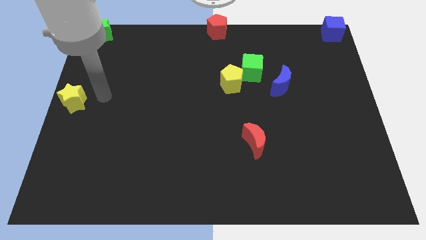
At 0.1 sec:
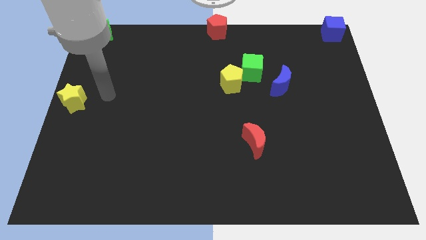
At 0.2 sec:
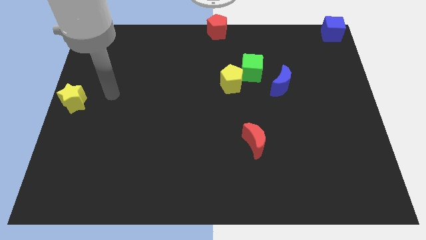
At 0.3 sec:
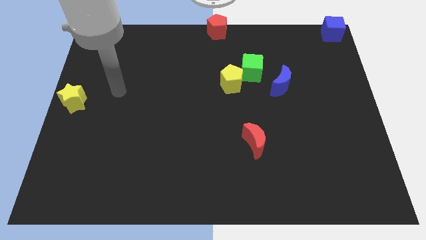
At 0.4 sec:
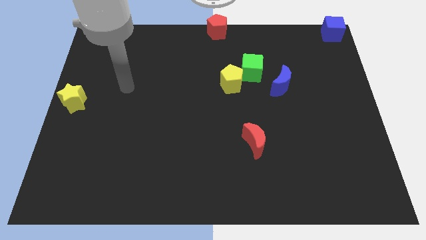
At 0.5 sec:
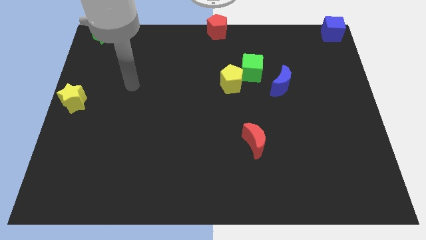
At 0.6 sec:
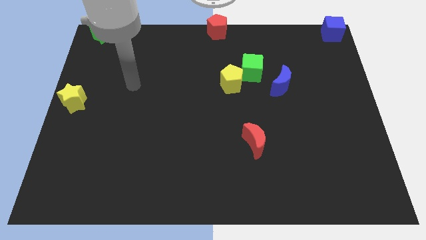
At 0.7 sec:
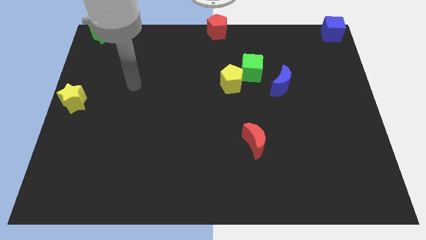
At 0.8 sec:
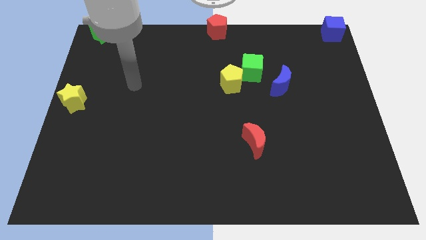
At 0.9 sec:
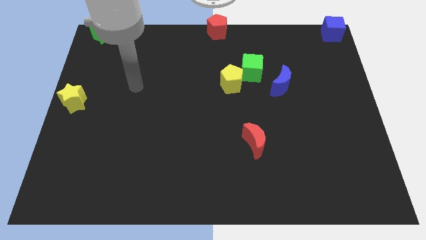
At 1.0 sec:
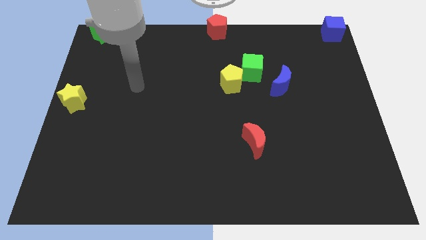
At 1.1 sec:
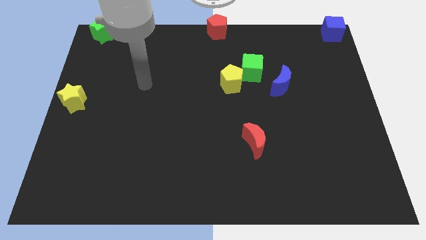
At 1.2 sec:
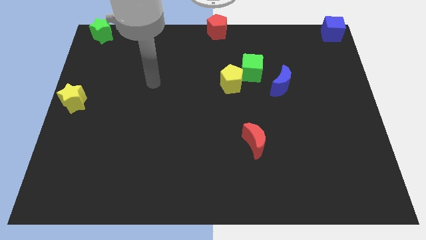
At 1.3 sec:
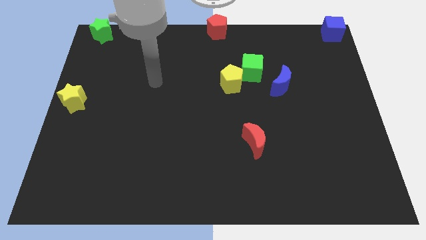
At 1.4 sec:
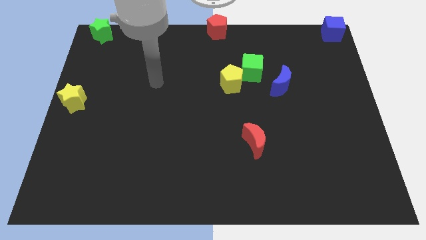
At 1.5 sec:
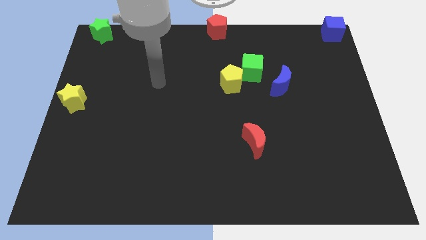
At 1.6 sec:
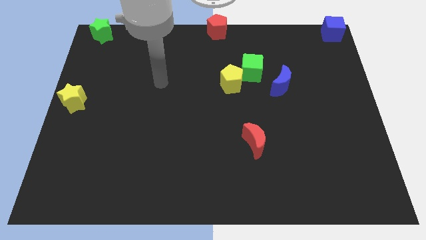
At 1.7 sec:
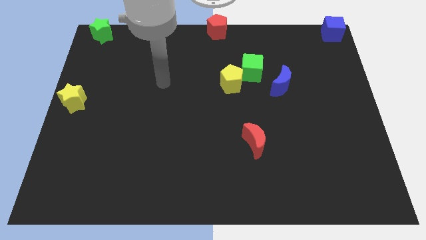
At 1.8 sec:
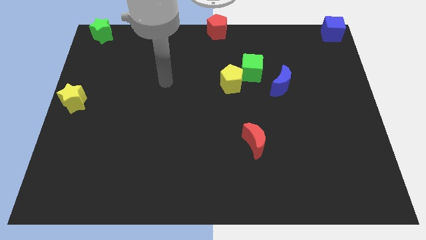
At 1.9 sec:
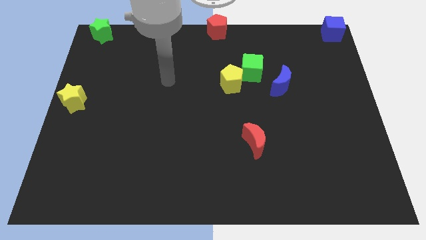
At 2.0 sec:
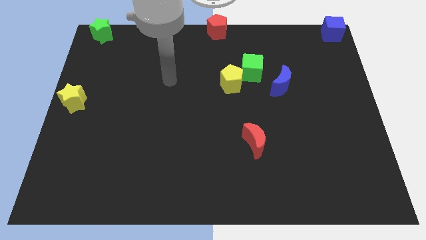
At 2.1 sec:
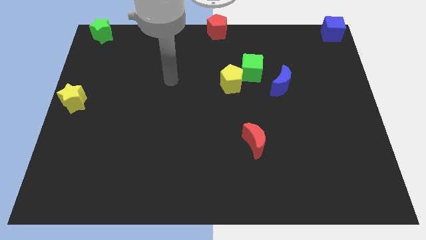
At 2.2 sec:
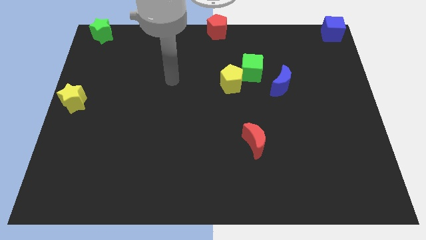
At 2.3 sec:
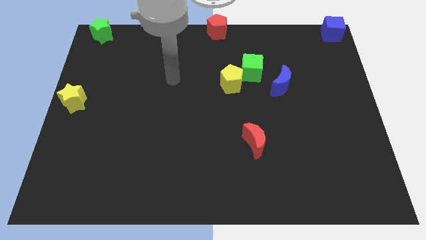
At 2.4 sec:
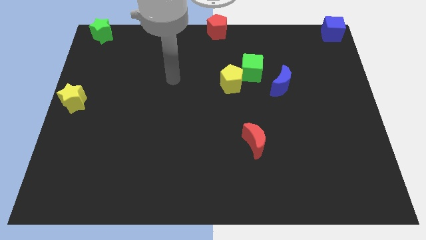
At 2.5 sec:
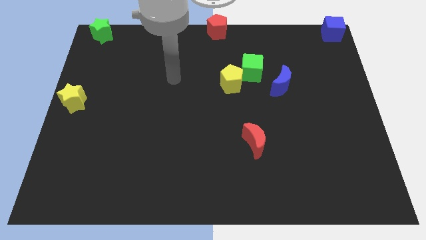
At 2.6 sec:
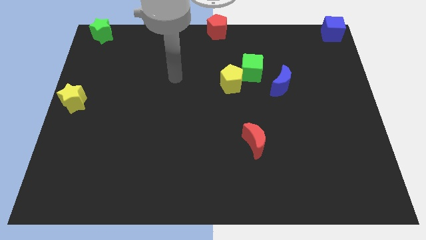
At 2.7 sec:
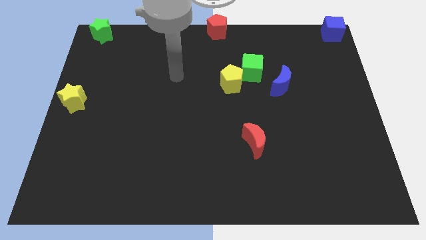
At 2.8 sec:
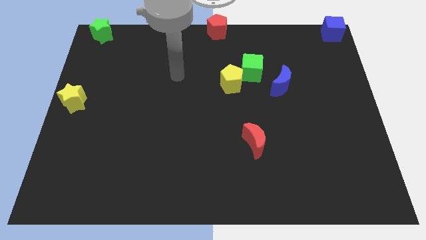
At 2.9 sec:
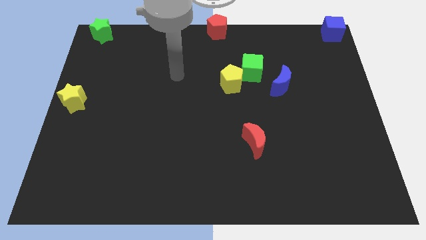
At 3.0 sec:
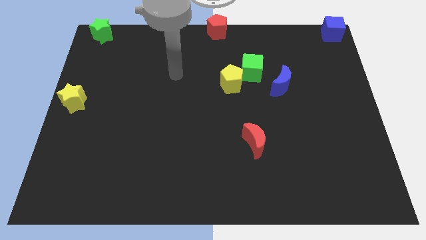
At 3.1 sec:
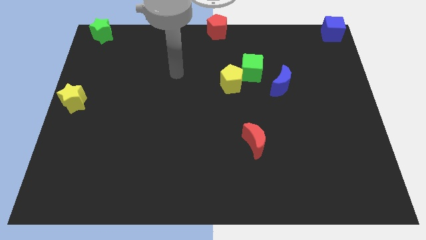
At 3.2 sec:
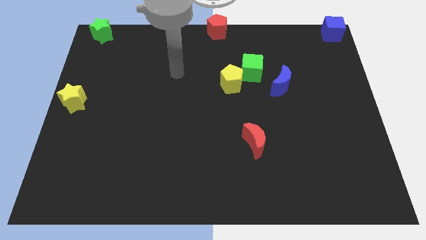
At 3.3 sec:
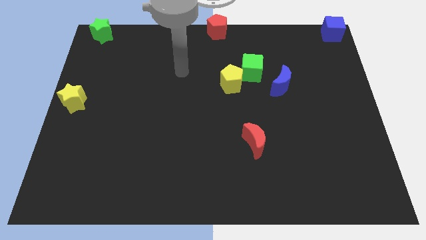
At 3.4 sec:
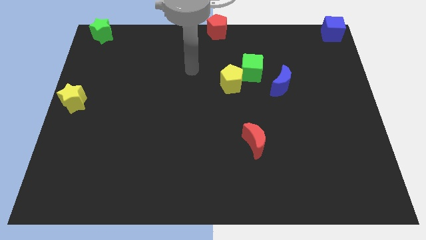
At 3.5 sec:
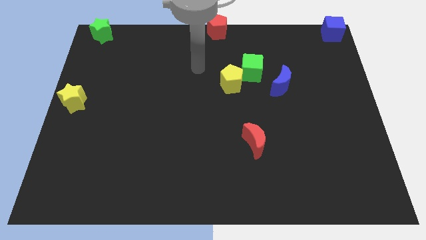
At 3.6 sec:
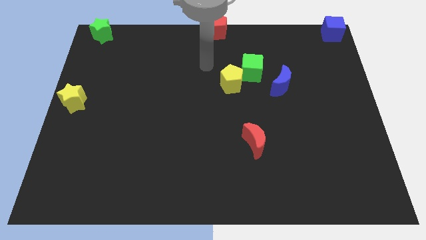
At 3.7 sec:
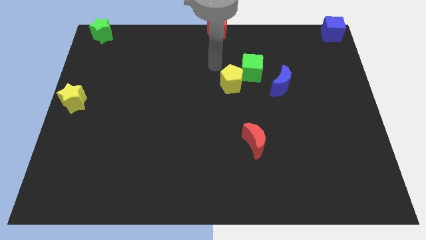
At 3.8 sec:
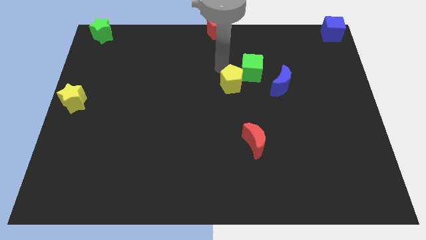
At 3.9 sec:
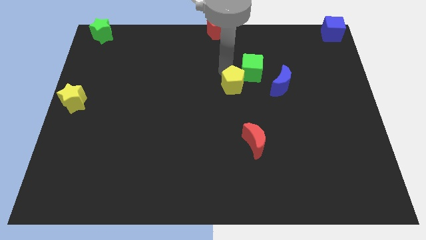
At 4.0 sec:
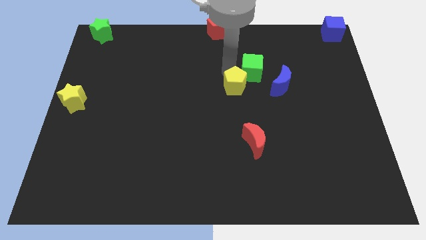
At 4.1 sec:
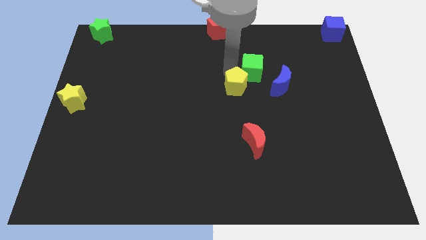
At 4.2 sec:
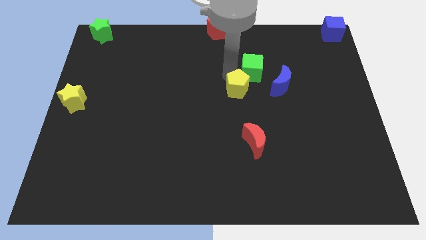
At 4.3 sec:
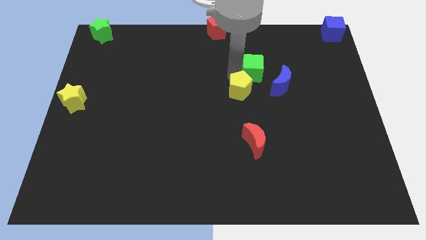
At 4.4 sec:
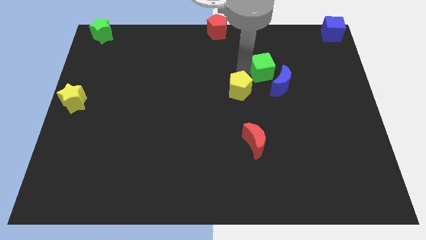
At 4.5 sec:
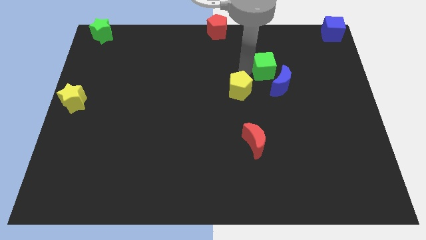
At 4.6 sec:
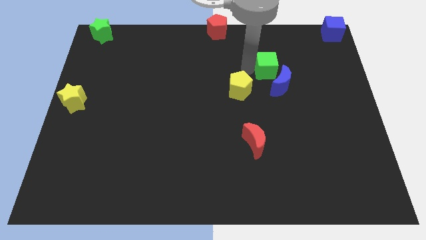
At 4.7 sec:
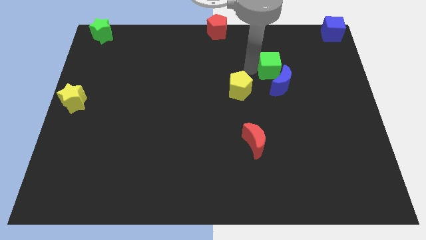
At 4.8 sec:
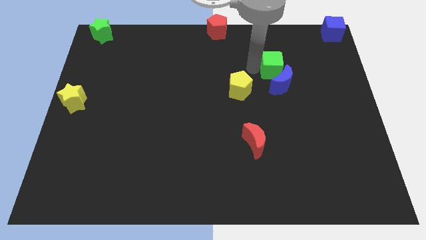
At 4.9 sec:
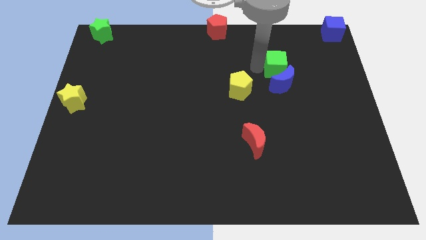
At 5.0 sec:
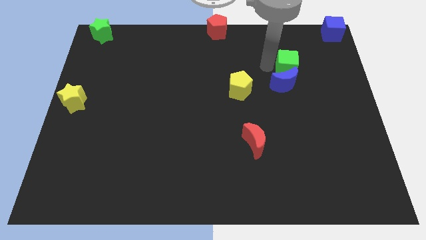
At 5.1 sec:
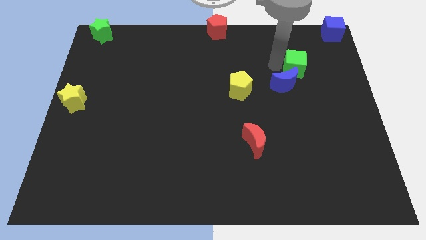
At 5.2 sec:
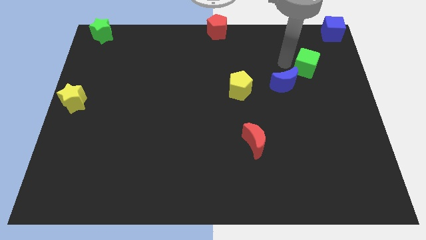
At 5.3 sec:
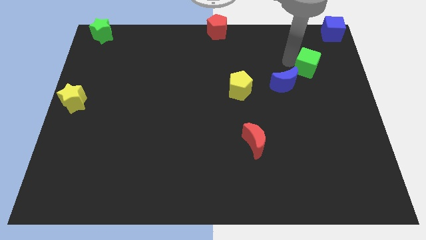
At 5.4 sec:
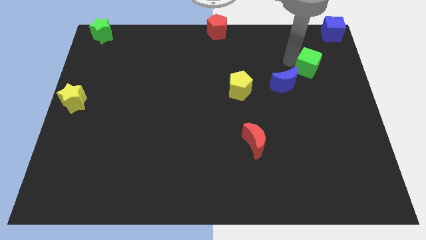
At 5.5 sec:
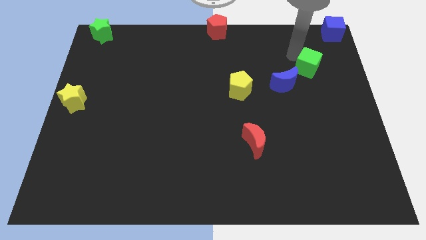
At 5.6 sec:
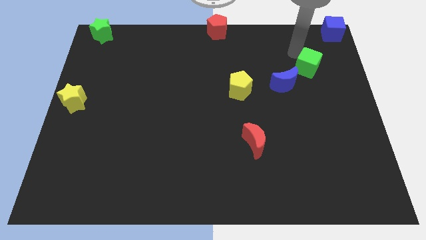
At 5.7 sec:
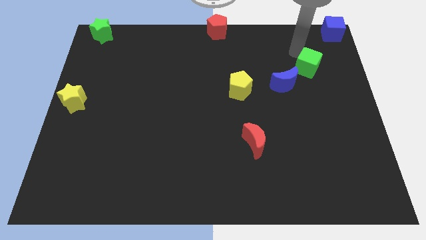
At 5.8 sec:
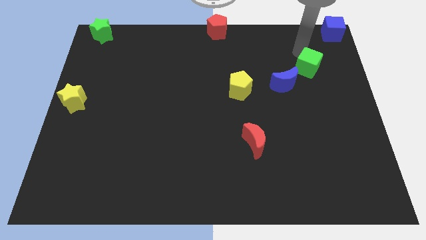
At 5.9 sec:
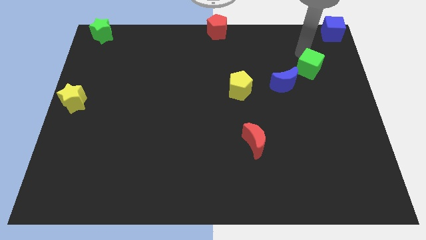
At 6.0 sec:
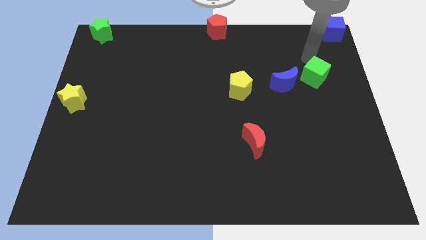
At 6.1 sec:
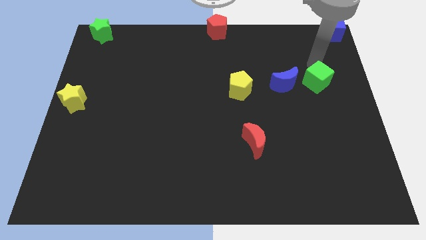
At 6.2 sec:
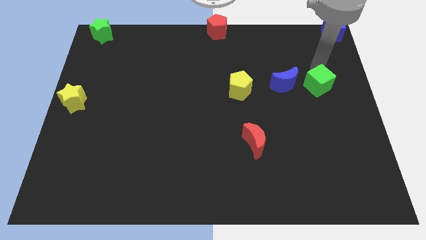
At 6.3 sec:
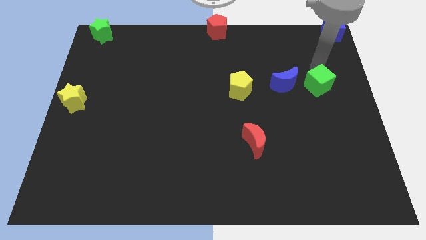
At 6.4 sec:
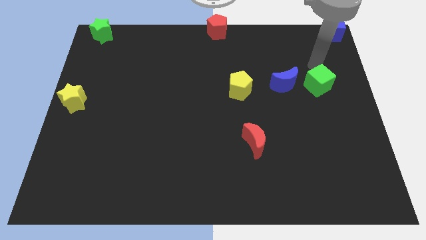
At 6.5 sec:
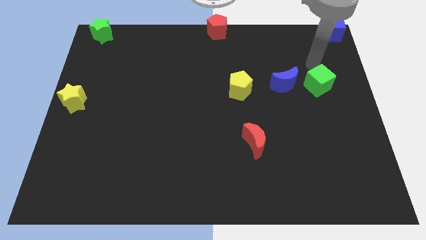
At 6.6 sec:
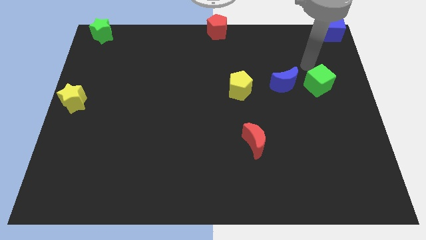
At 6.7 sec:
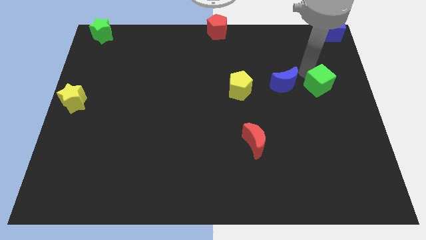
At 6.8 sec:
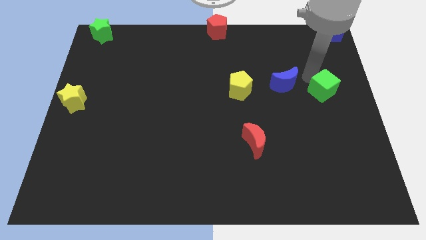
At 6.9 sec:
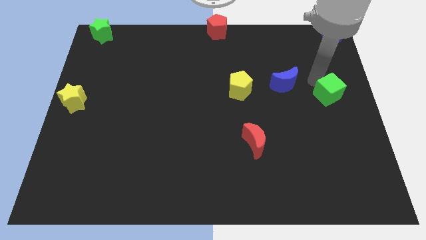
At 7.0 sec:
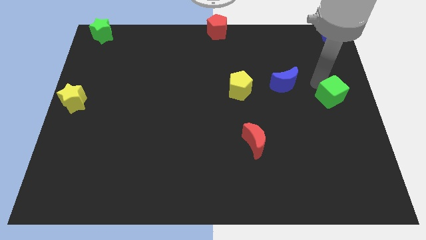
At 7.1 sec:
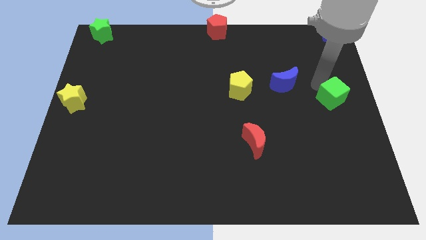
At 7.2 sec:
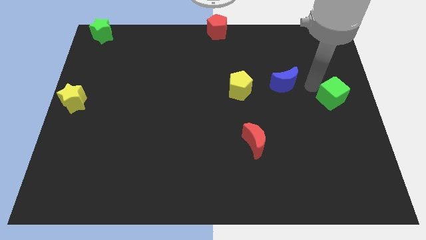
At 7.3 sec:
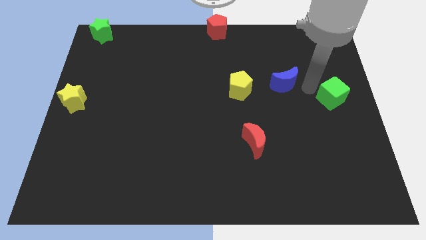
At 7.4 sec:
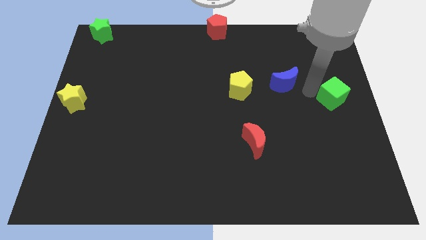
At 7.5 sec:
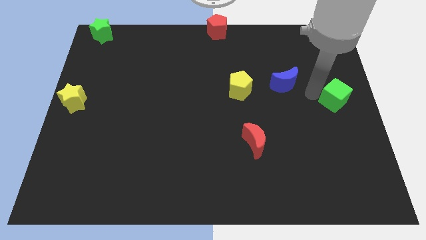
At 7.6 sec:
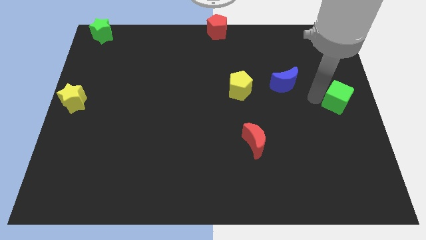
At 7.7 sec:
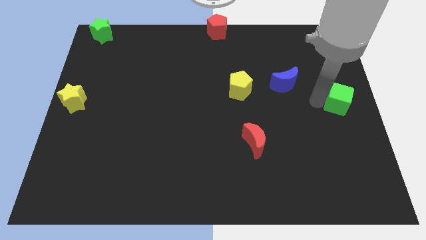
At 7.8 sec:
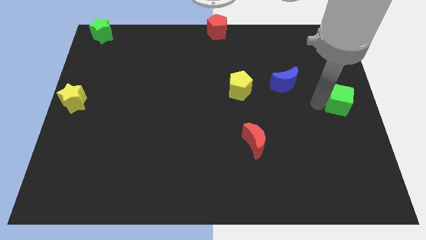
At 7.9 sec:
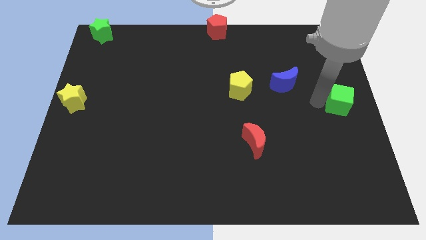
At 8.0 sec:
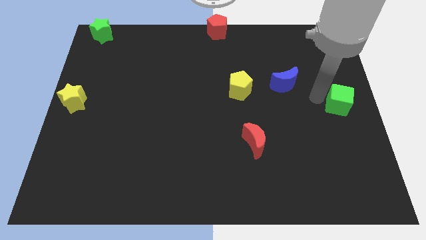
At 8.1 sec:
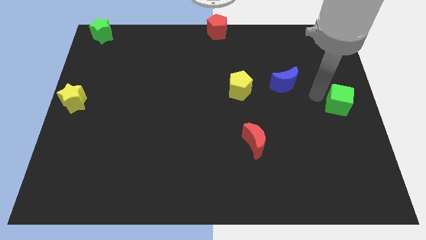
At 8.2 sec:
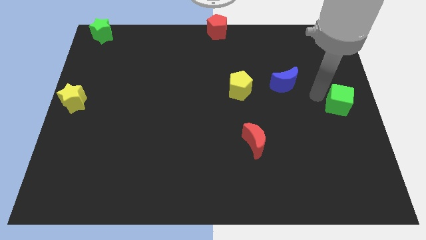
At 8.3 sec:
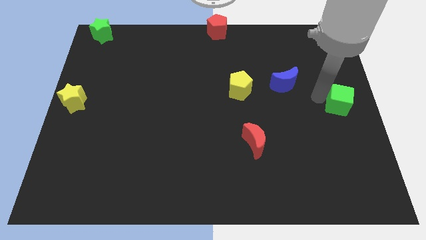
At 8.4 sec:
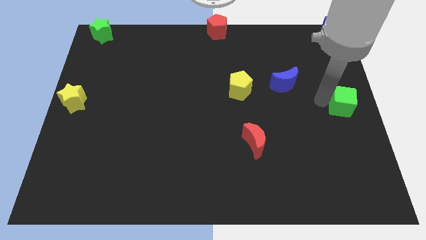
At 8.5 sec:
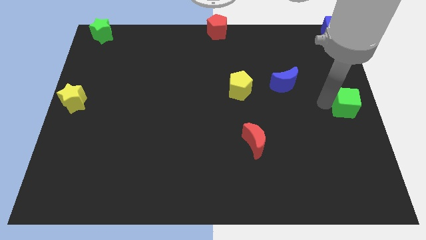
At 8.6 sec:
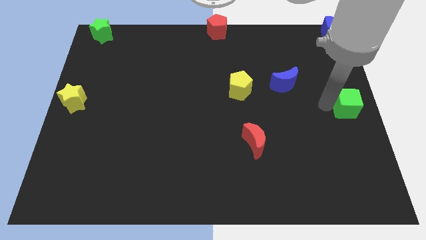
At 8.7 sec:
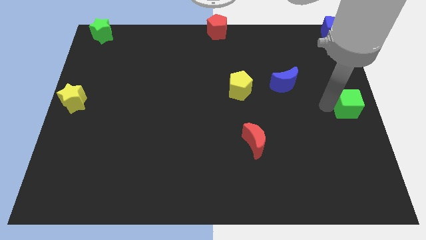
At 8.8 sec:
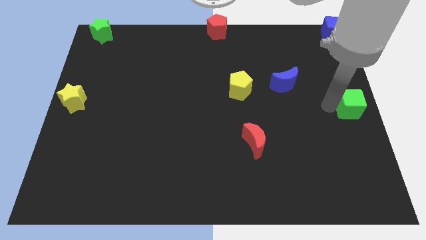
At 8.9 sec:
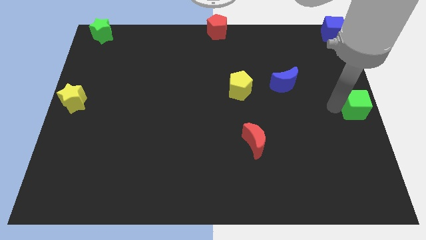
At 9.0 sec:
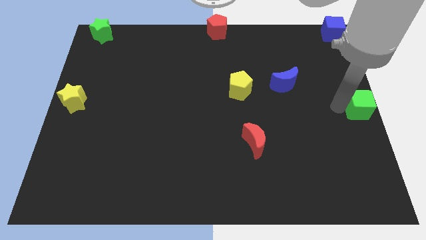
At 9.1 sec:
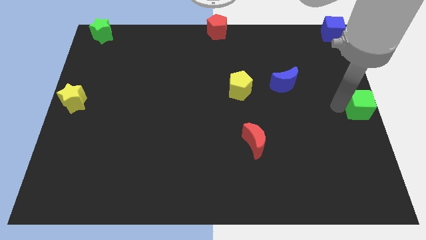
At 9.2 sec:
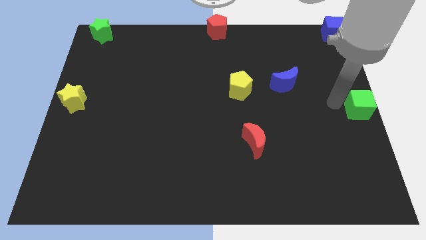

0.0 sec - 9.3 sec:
place the green cube to the right center of the board
